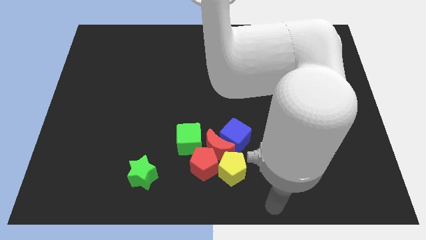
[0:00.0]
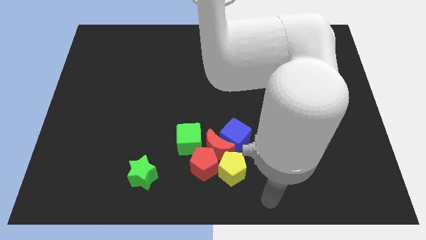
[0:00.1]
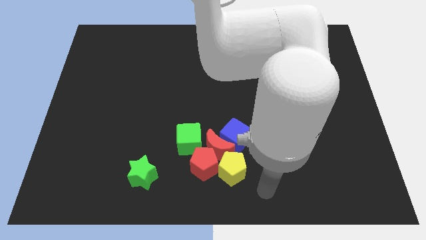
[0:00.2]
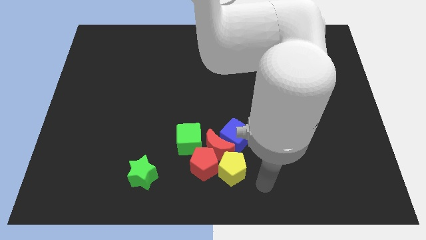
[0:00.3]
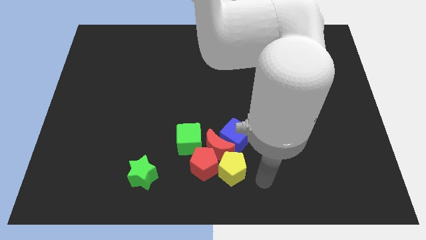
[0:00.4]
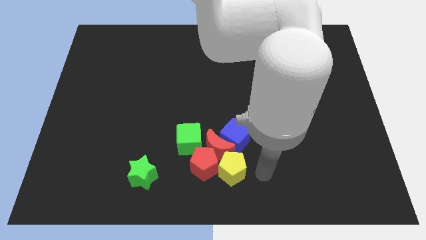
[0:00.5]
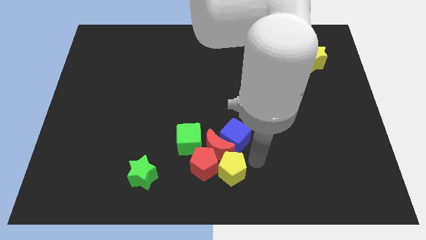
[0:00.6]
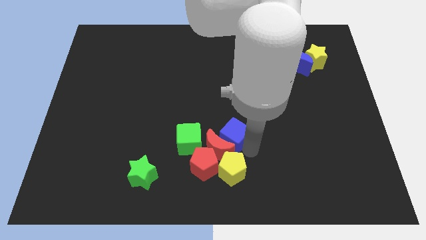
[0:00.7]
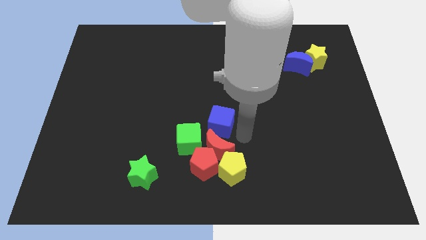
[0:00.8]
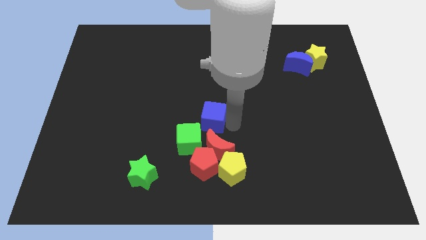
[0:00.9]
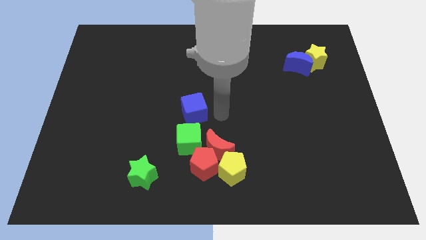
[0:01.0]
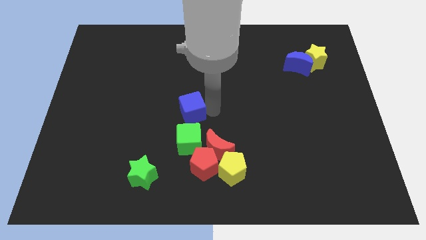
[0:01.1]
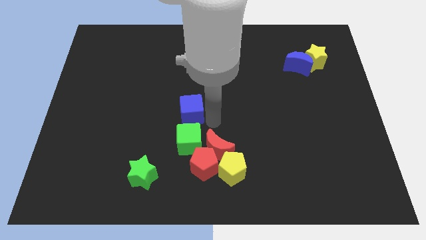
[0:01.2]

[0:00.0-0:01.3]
place the blue cube at the top of green cube

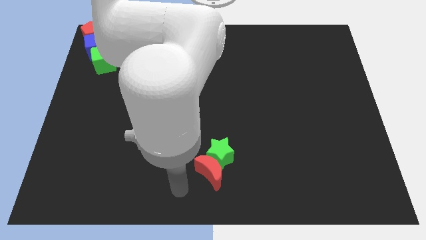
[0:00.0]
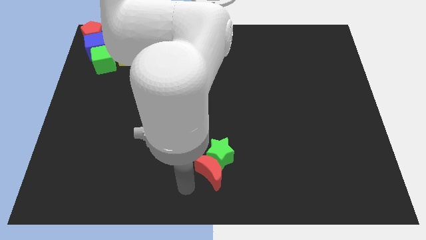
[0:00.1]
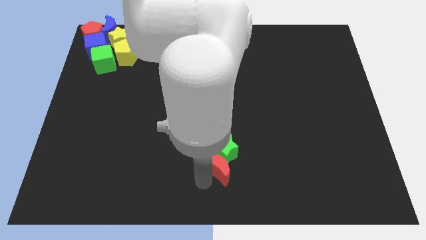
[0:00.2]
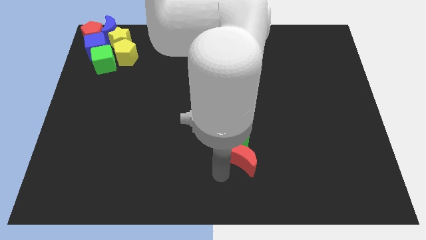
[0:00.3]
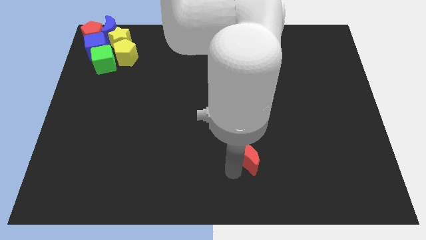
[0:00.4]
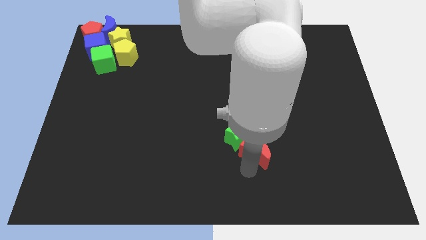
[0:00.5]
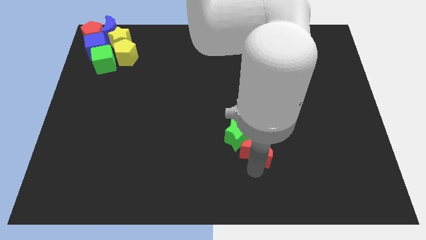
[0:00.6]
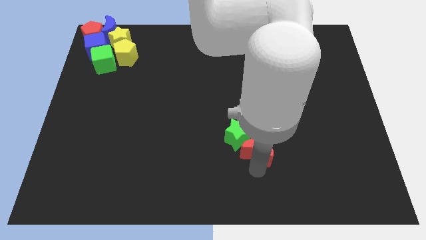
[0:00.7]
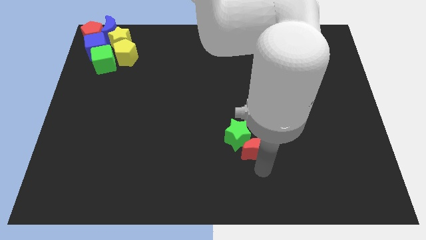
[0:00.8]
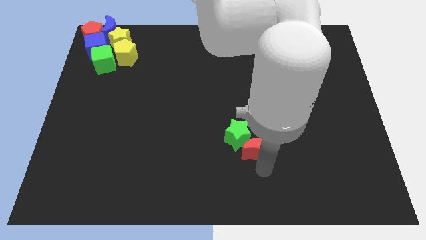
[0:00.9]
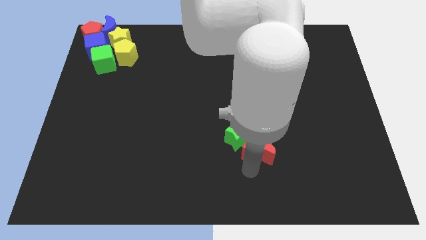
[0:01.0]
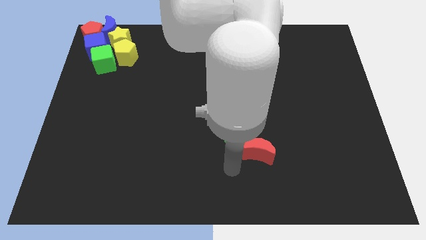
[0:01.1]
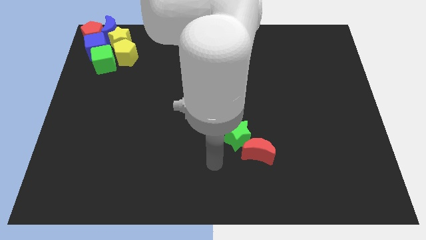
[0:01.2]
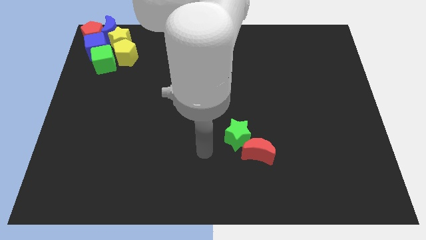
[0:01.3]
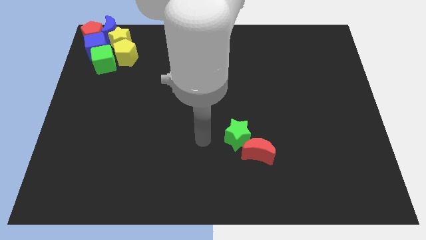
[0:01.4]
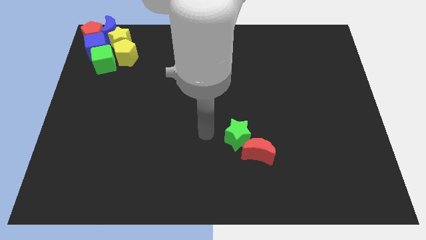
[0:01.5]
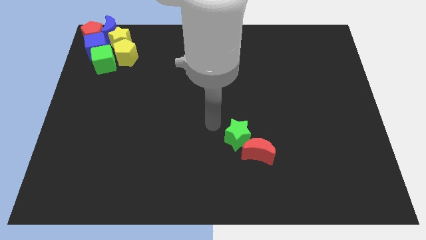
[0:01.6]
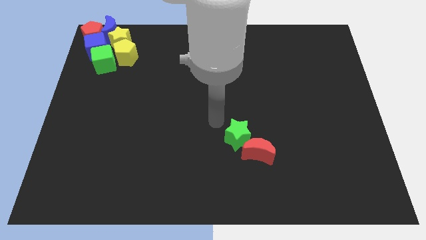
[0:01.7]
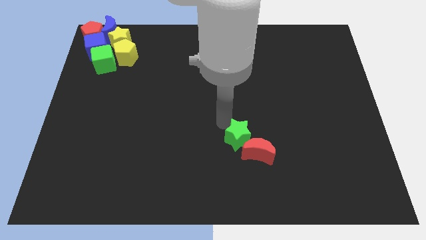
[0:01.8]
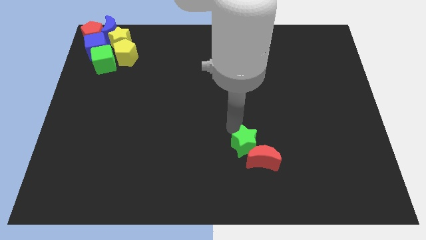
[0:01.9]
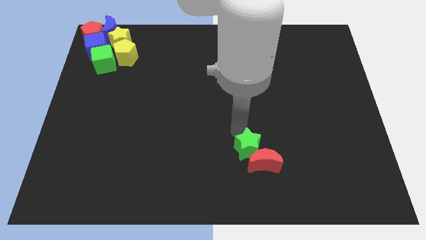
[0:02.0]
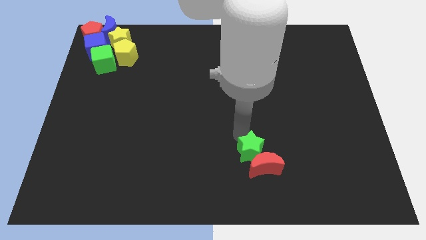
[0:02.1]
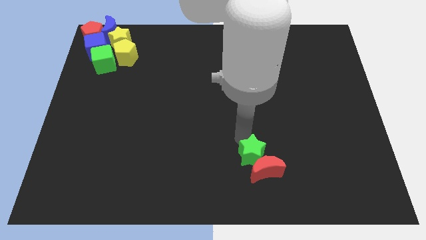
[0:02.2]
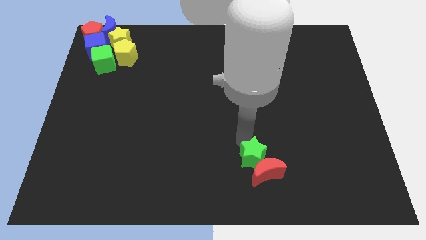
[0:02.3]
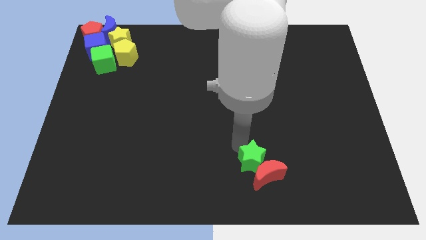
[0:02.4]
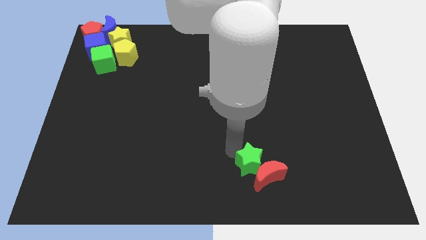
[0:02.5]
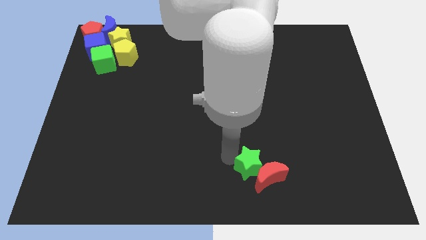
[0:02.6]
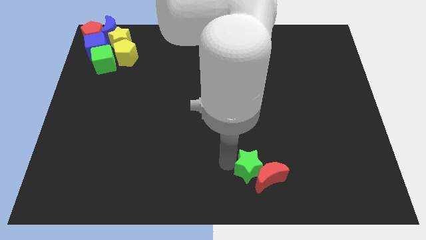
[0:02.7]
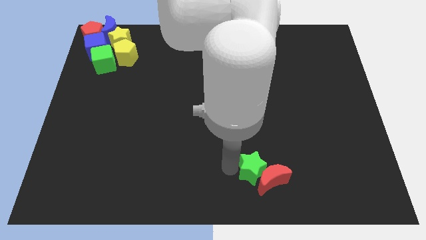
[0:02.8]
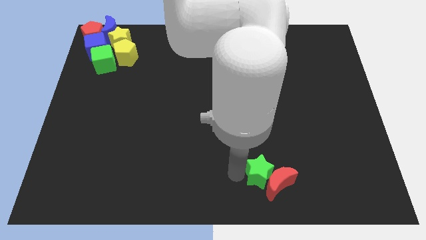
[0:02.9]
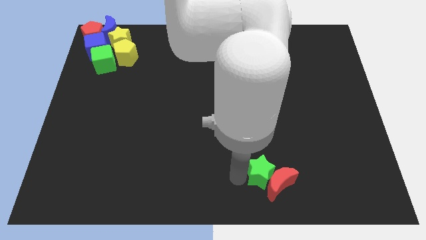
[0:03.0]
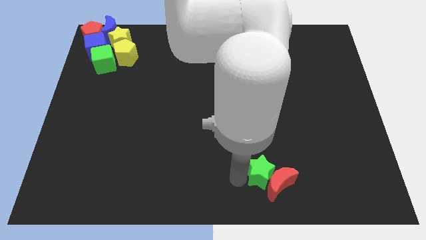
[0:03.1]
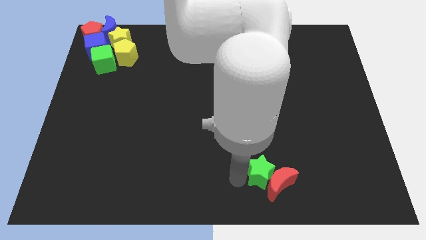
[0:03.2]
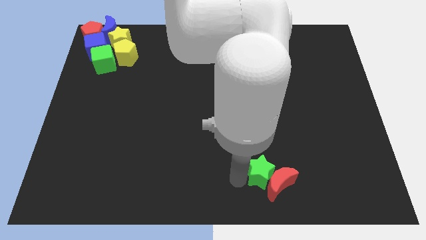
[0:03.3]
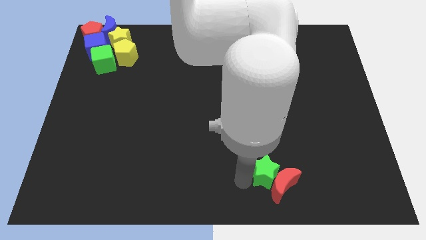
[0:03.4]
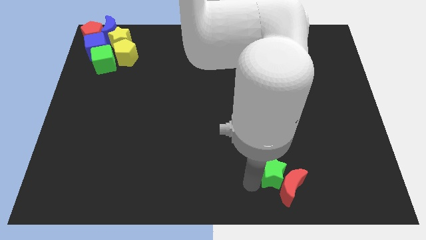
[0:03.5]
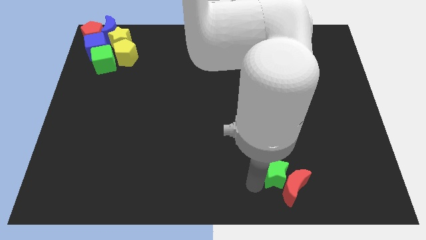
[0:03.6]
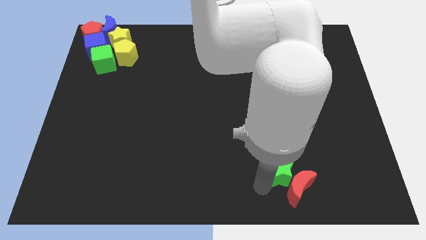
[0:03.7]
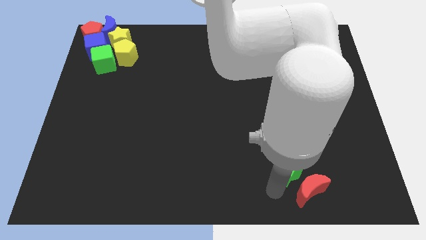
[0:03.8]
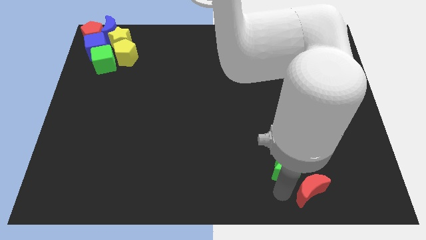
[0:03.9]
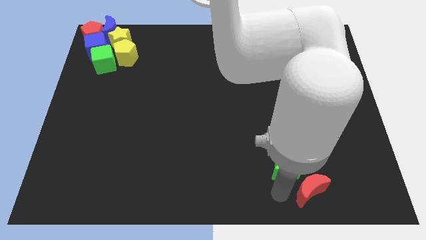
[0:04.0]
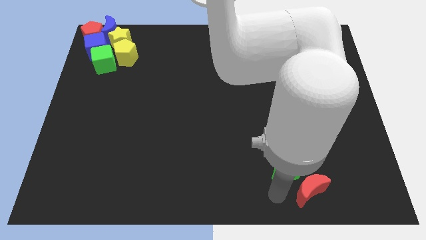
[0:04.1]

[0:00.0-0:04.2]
move the green star and the red moon towards the bottom right of the board

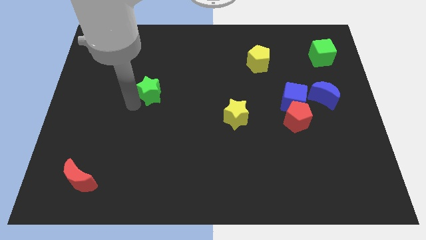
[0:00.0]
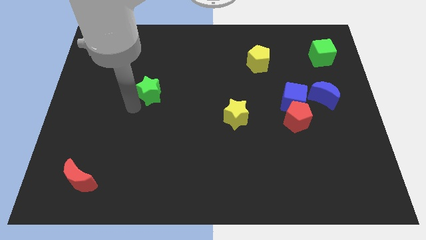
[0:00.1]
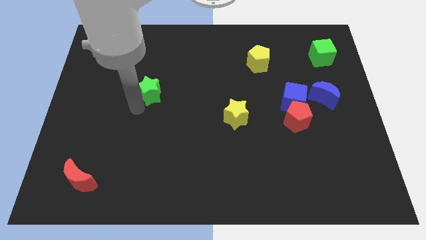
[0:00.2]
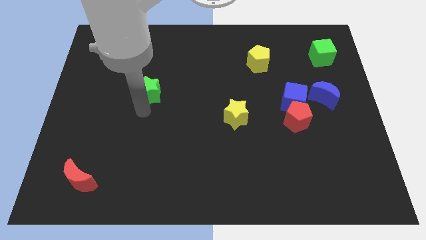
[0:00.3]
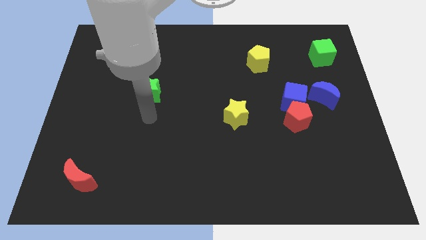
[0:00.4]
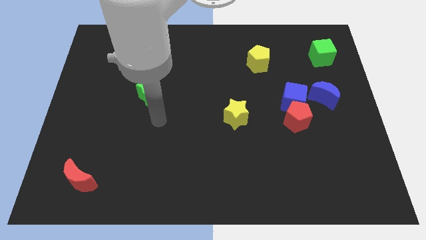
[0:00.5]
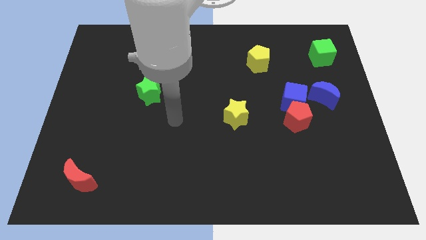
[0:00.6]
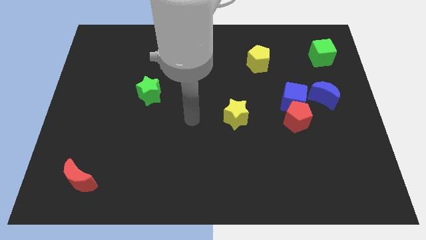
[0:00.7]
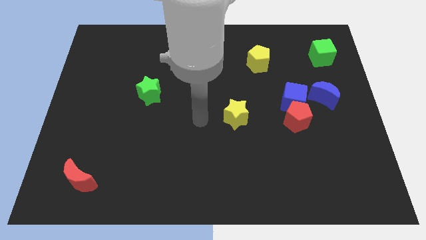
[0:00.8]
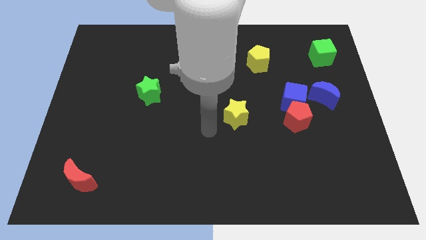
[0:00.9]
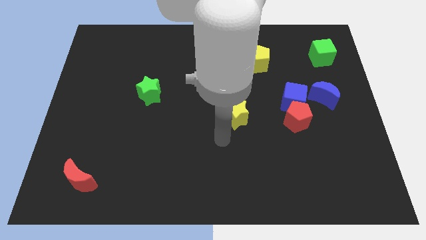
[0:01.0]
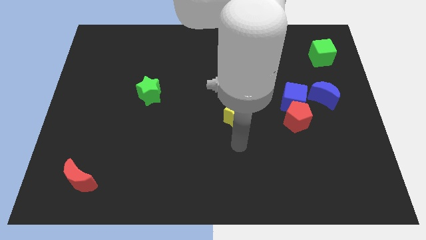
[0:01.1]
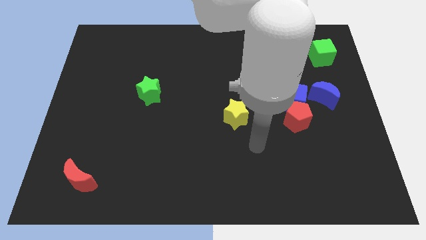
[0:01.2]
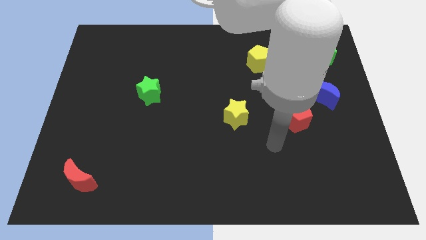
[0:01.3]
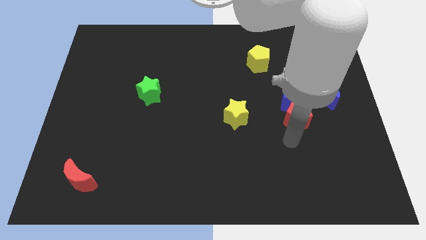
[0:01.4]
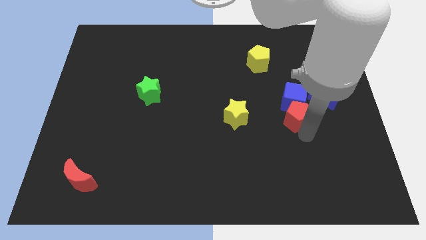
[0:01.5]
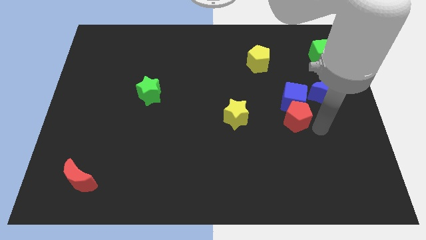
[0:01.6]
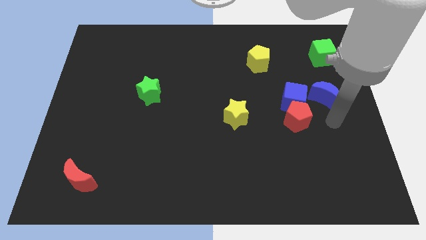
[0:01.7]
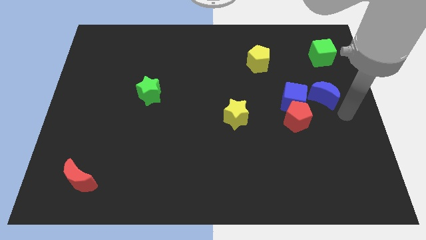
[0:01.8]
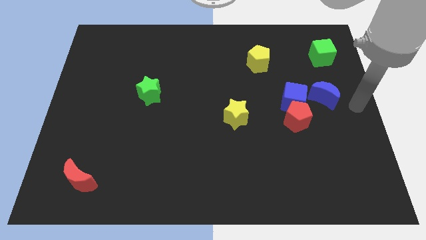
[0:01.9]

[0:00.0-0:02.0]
place the pointer to the right of the blue moon

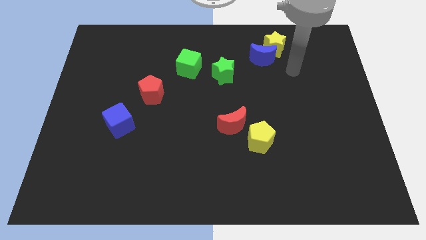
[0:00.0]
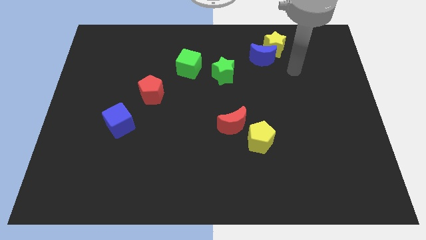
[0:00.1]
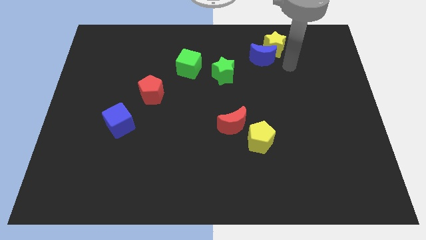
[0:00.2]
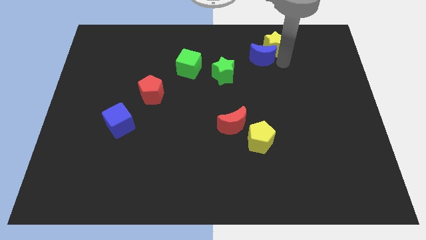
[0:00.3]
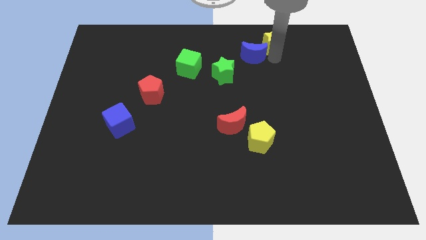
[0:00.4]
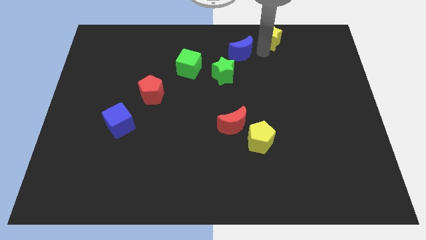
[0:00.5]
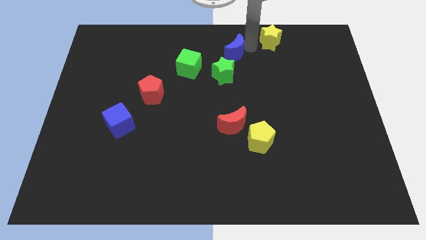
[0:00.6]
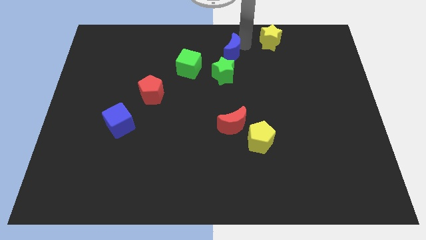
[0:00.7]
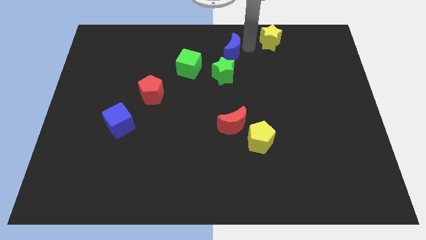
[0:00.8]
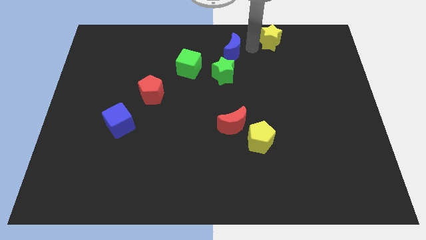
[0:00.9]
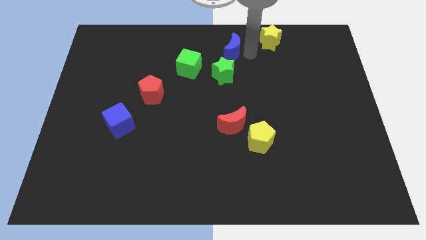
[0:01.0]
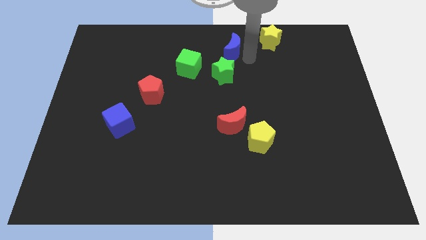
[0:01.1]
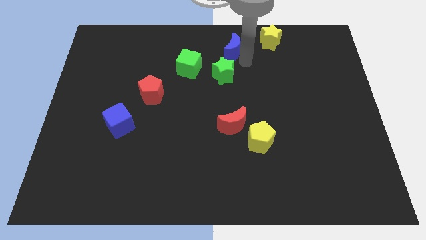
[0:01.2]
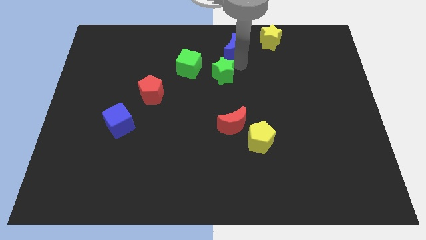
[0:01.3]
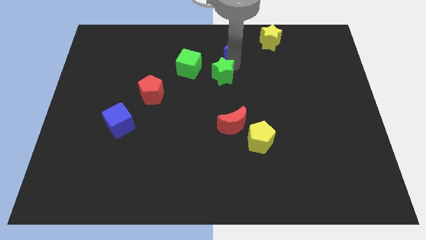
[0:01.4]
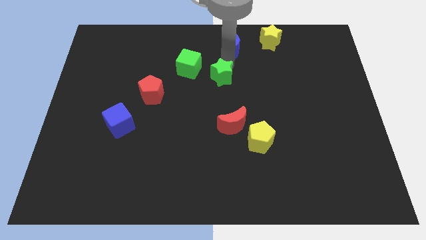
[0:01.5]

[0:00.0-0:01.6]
separate blue moon and the yellow star
